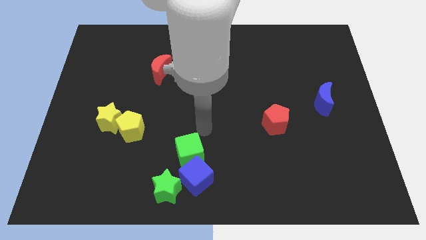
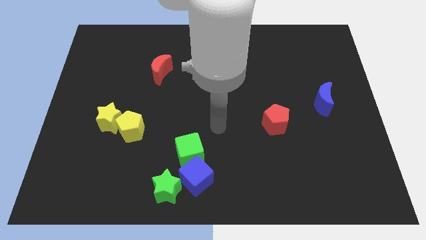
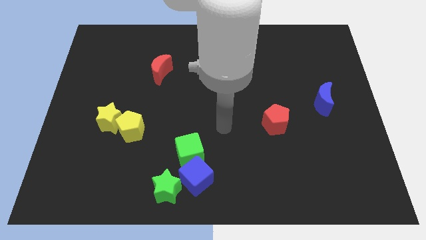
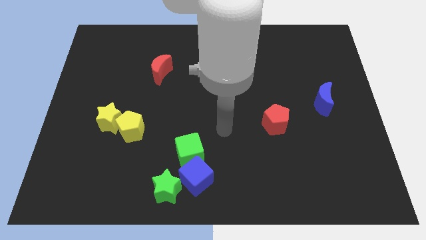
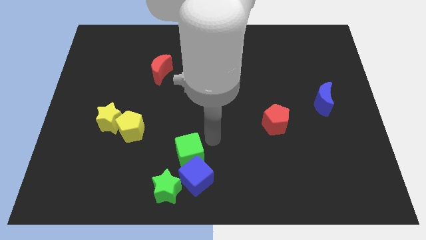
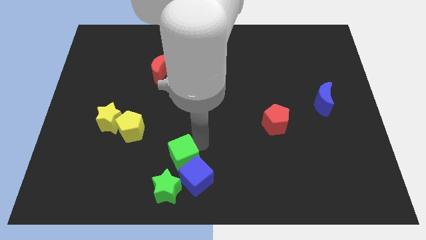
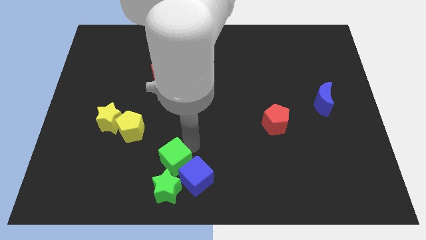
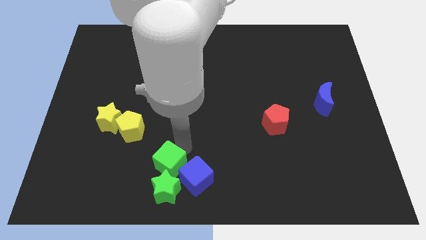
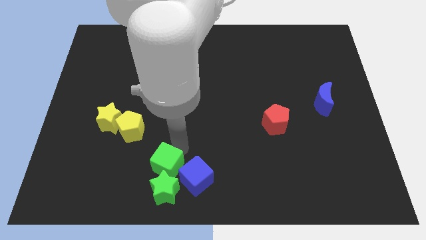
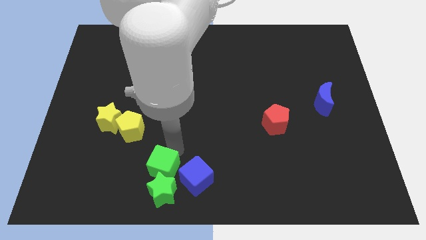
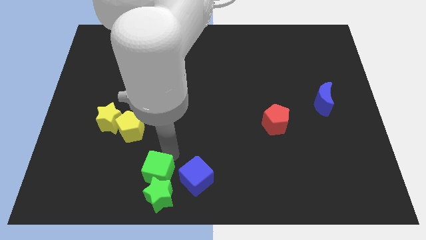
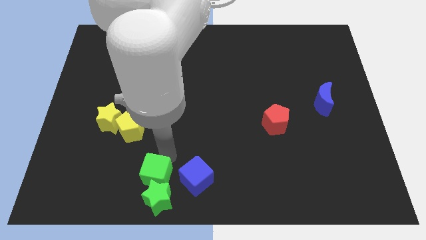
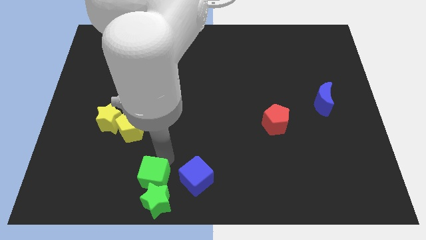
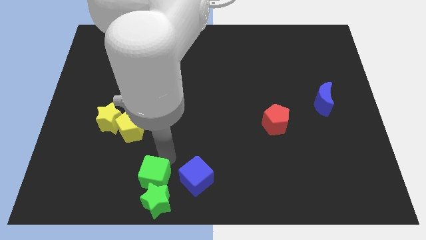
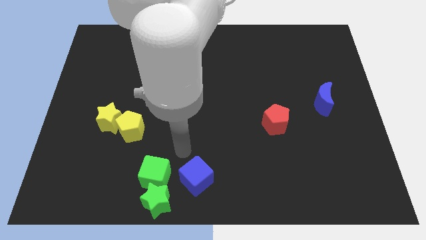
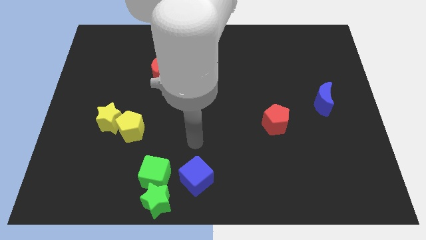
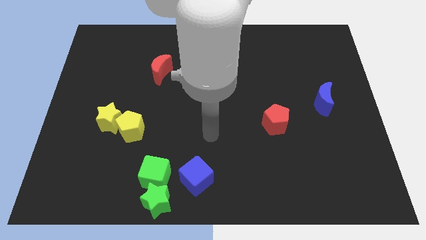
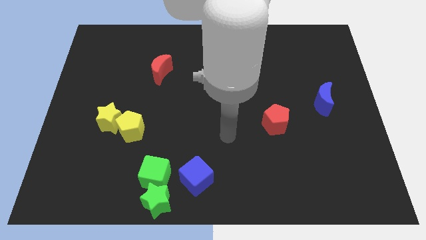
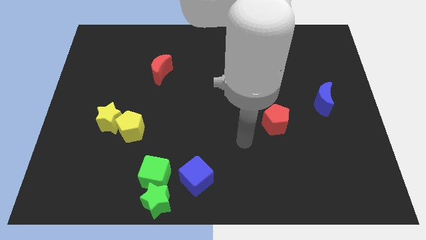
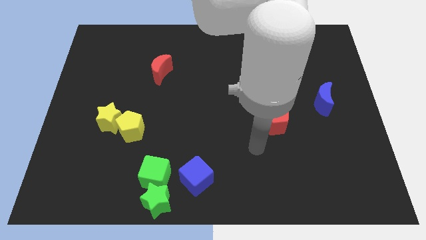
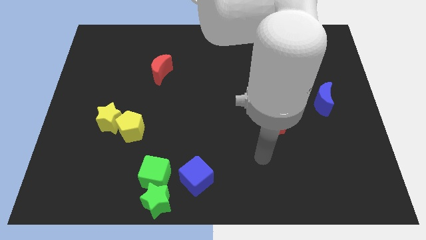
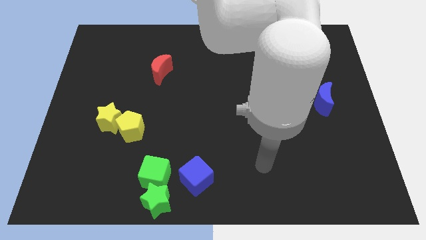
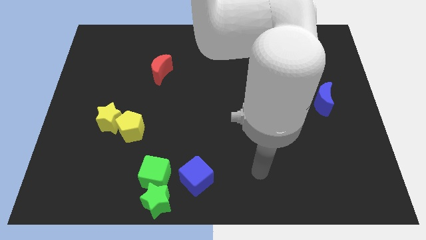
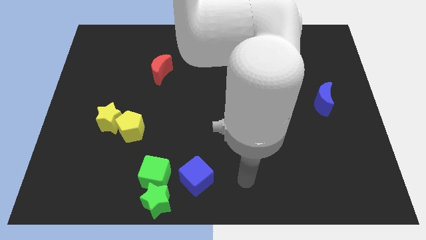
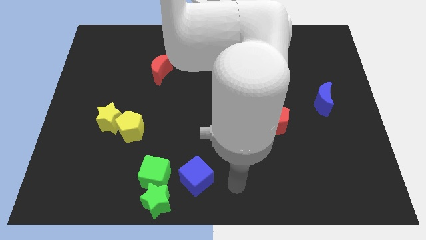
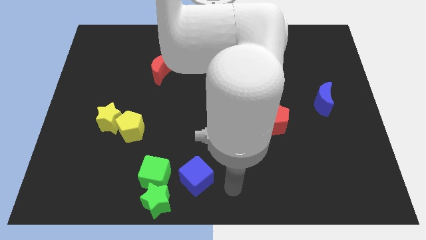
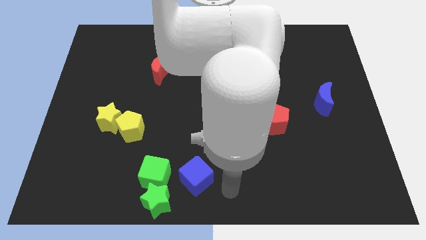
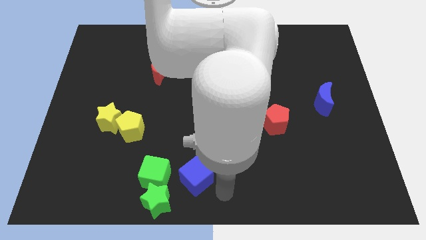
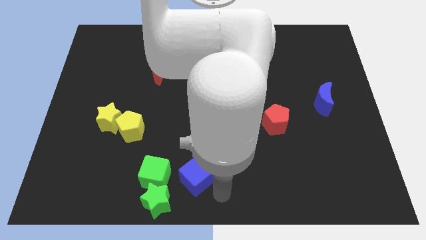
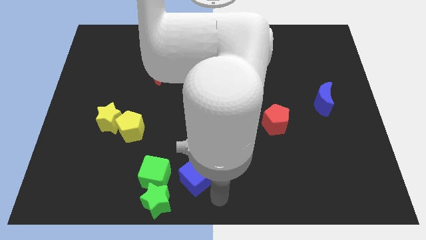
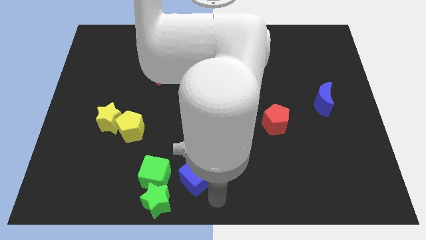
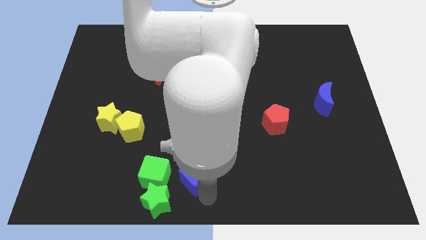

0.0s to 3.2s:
move the green cube to the top of the grren star

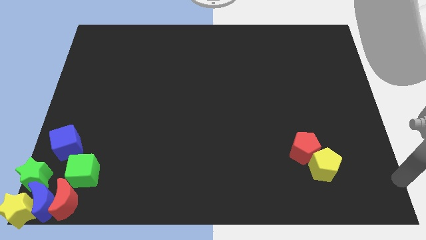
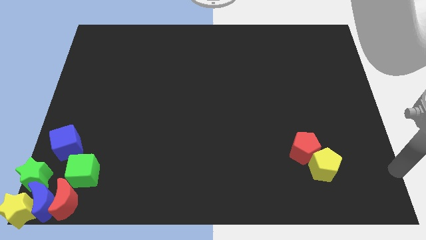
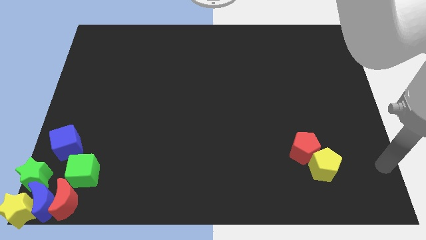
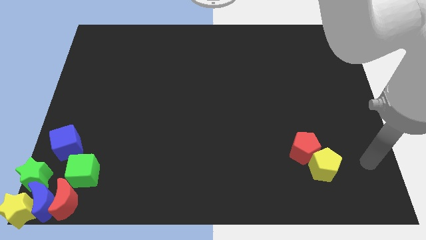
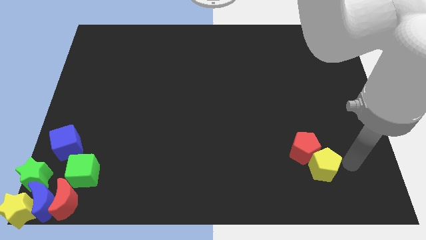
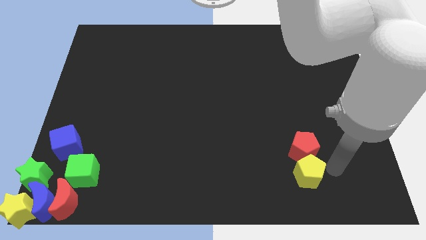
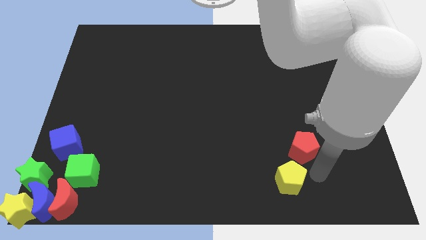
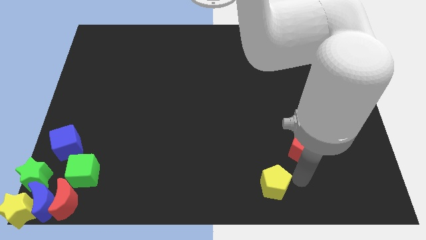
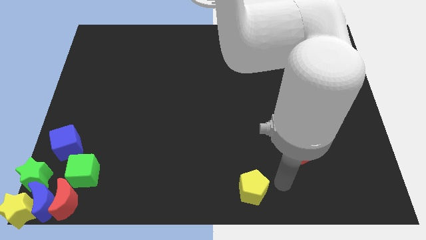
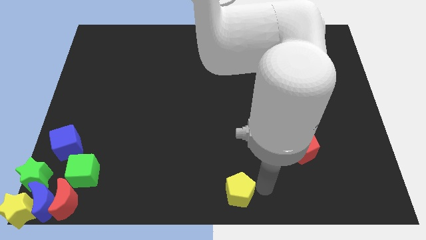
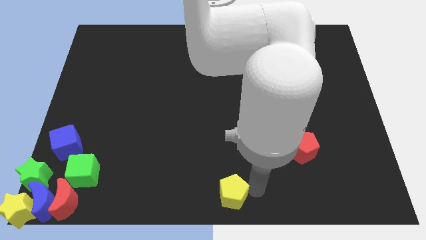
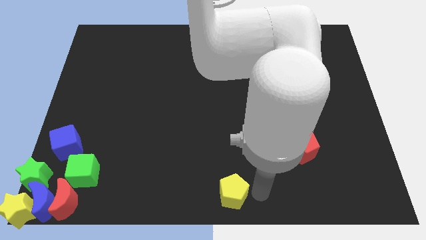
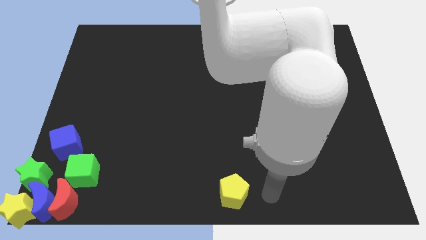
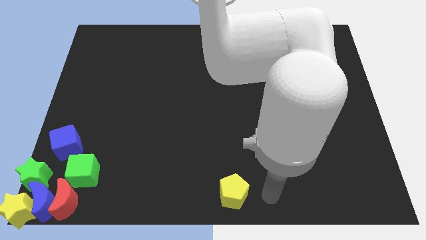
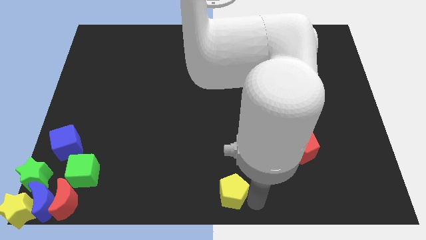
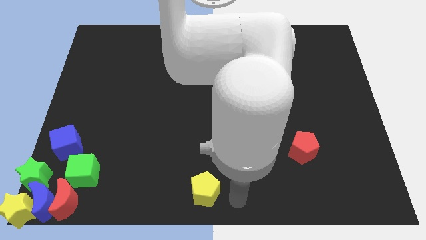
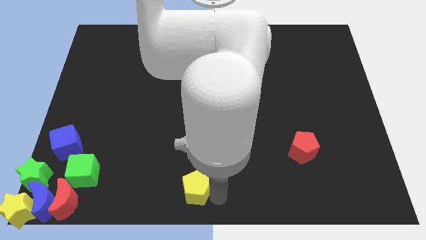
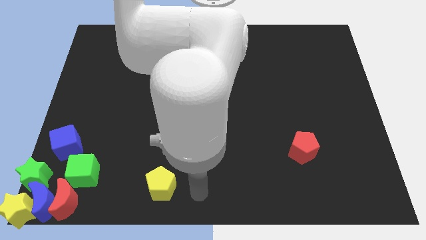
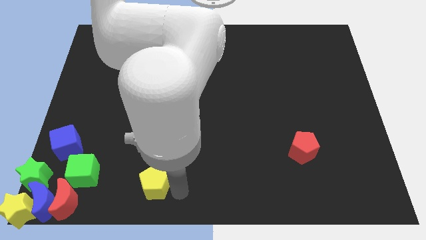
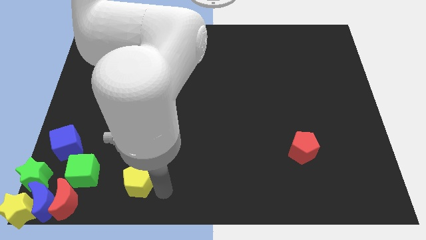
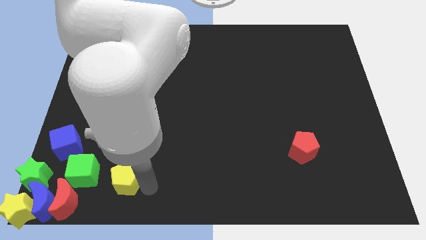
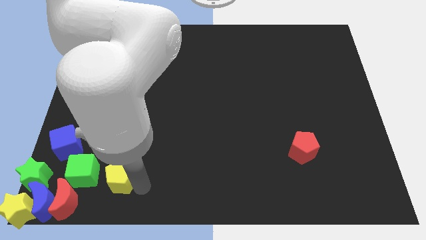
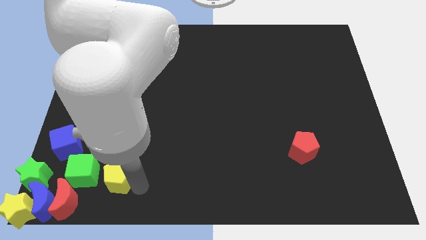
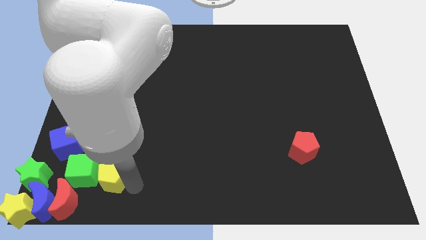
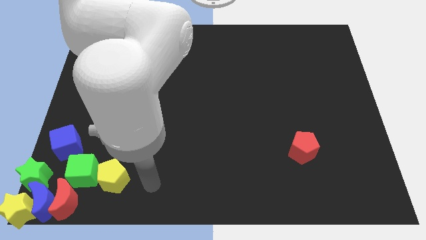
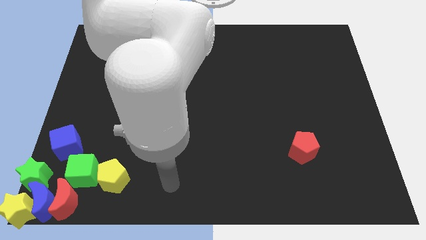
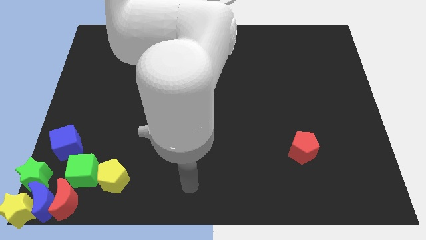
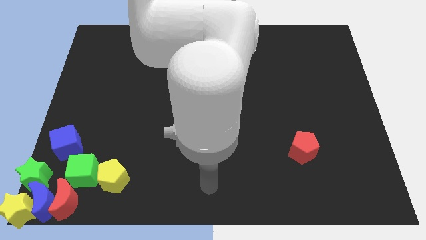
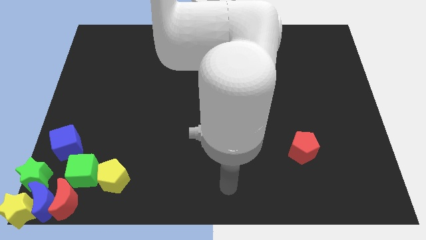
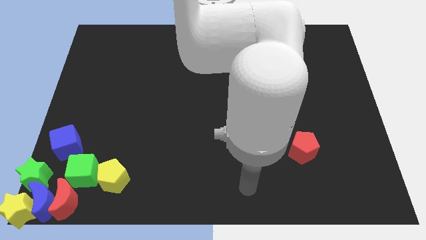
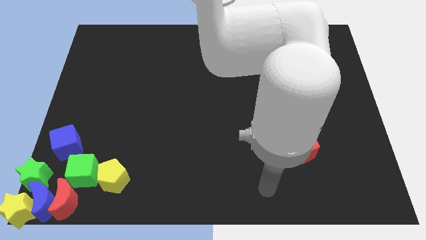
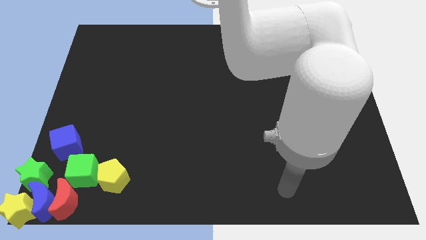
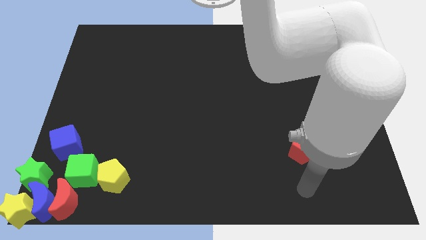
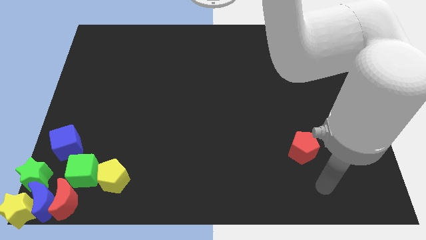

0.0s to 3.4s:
move the yellow pentagon to the right side of the green cube

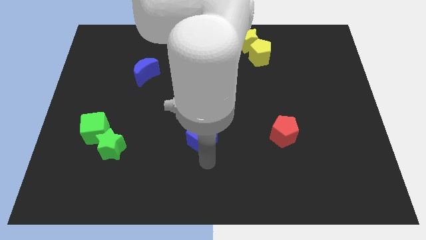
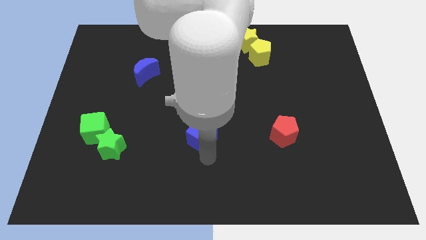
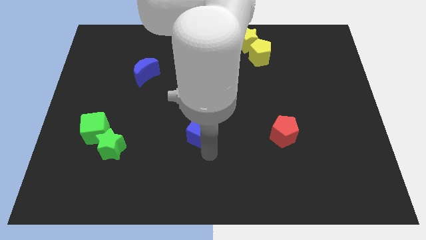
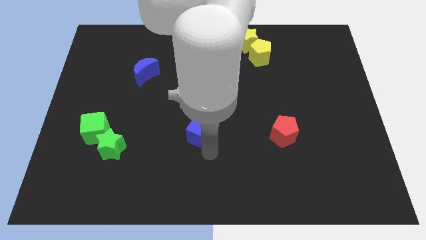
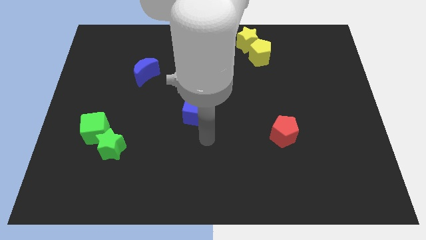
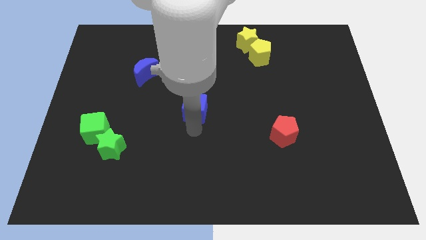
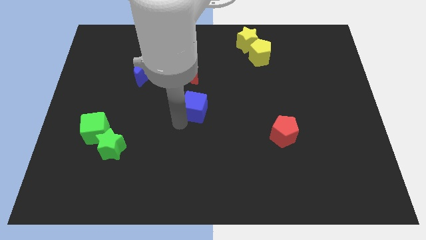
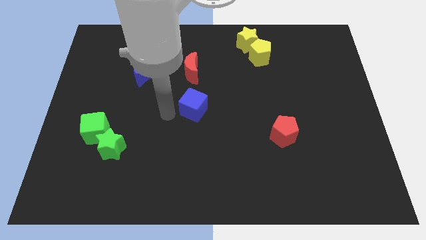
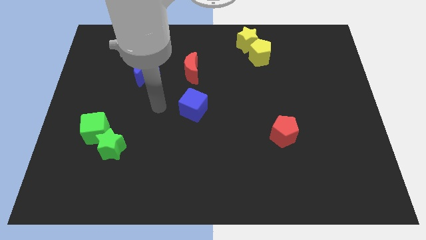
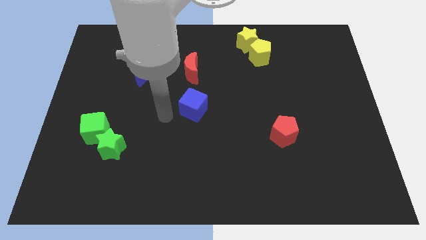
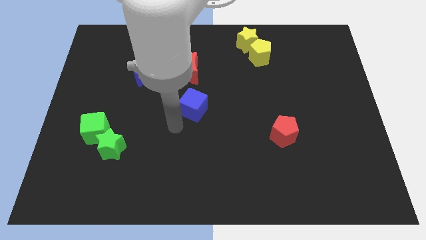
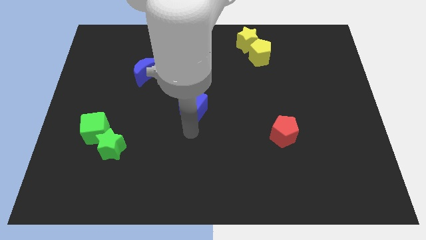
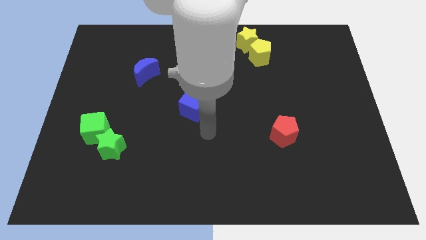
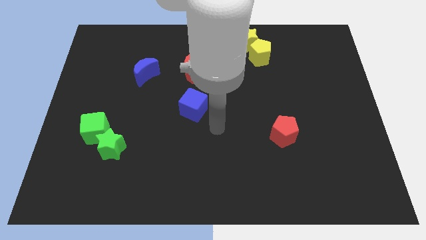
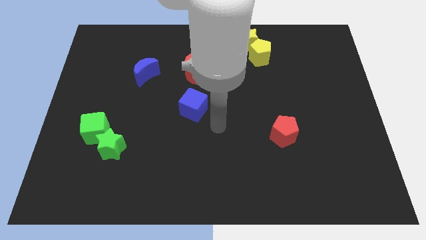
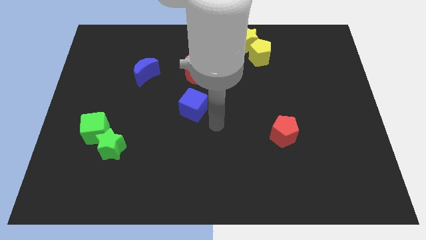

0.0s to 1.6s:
move the blue cube below the red moon

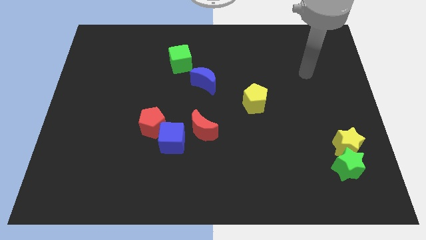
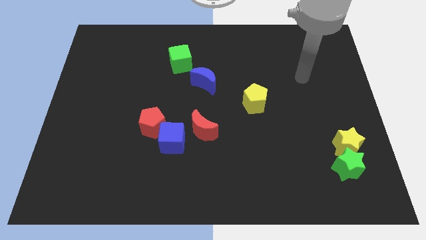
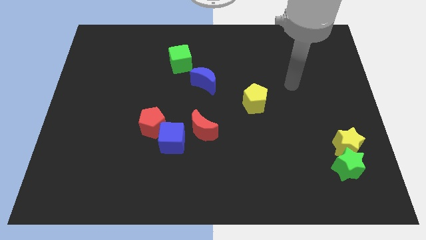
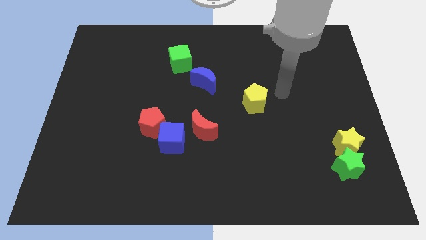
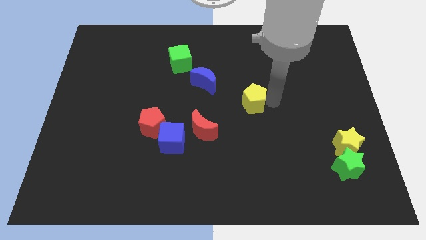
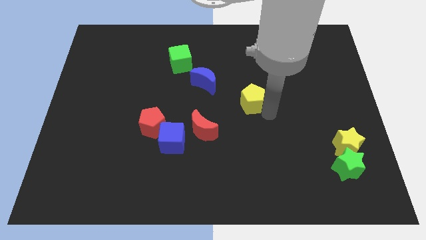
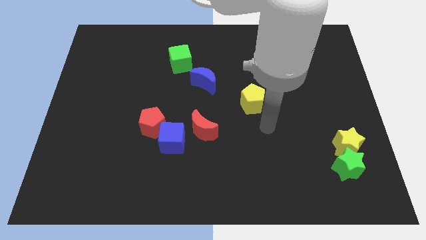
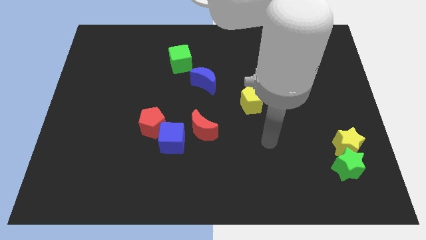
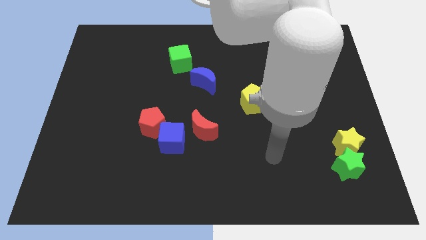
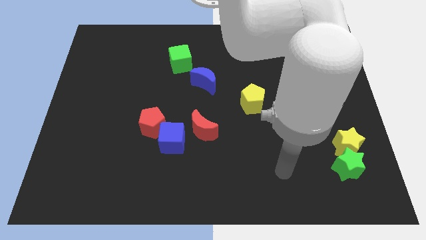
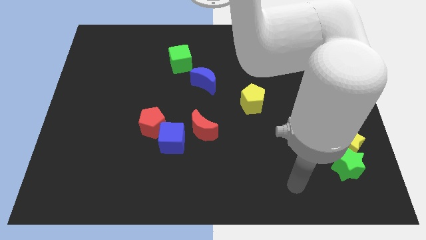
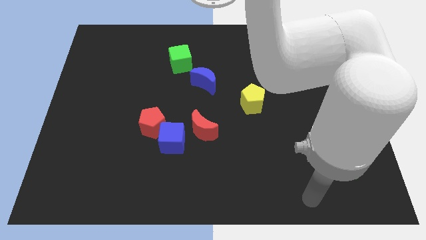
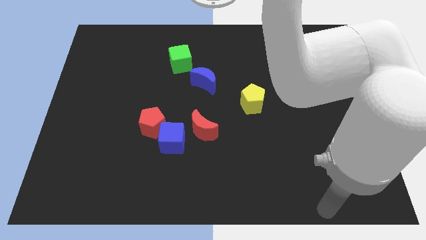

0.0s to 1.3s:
move your arm to the bottom right of the board
